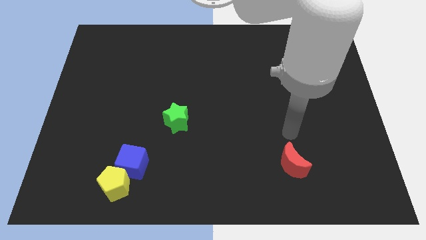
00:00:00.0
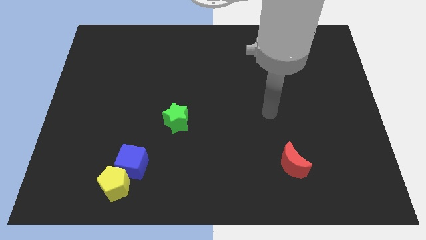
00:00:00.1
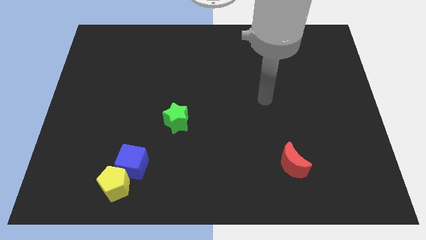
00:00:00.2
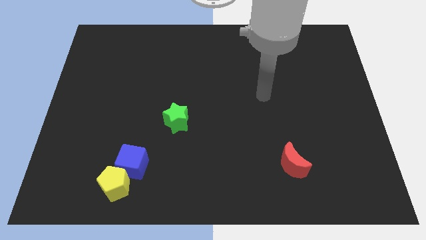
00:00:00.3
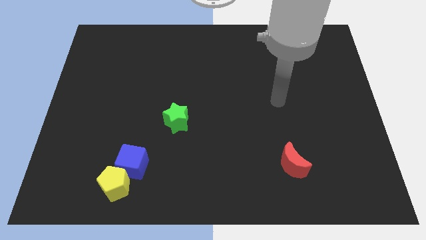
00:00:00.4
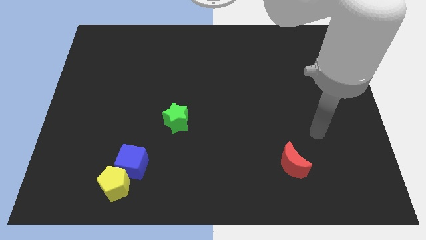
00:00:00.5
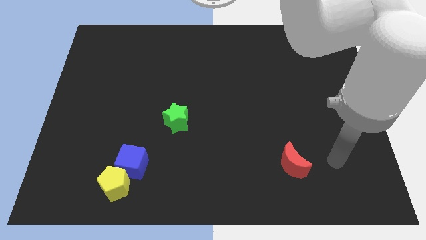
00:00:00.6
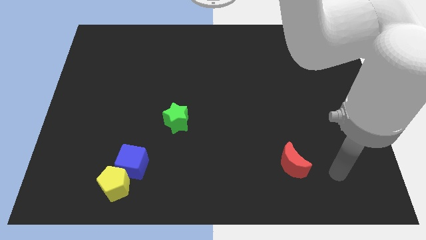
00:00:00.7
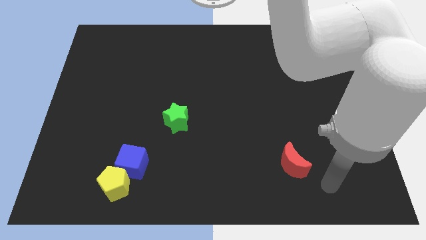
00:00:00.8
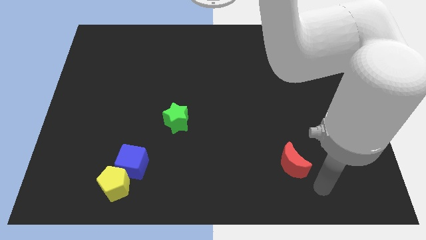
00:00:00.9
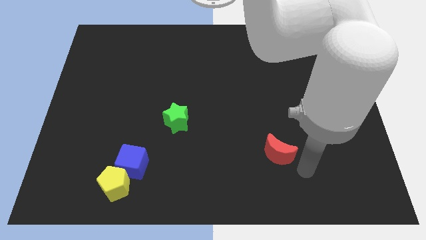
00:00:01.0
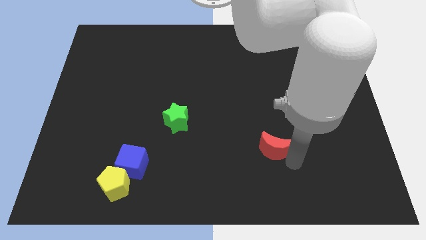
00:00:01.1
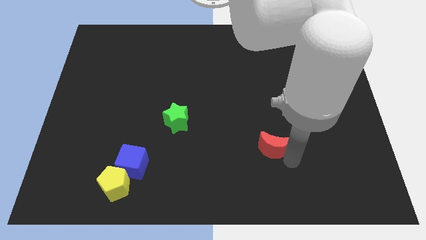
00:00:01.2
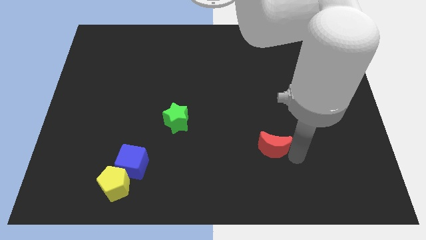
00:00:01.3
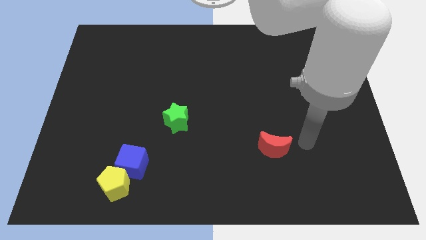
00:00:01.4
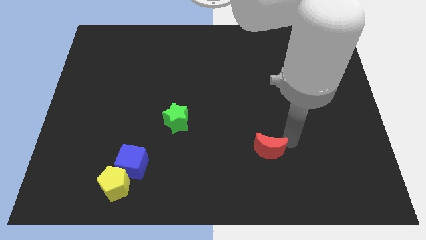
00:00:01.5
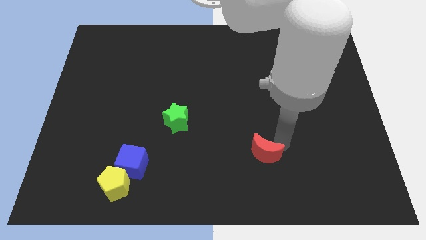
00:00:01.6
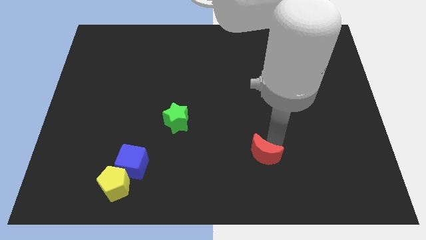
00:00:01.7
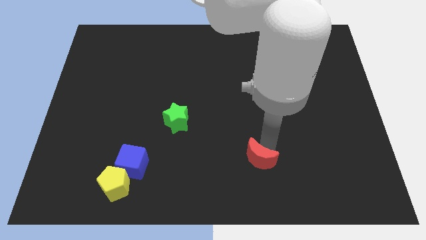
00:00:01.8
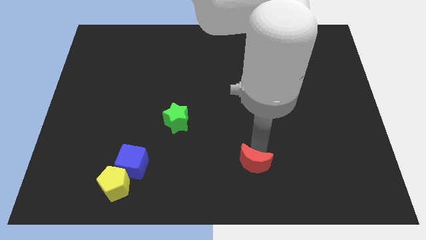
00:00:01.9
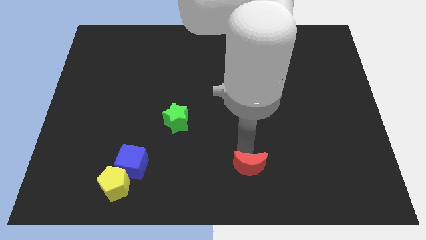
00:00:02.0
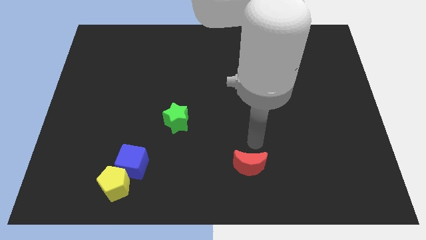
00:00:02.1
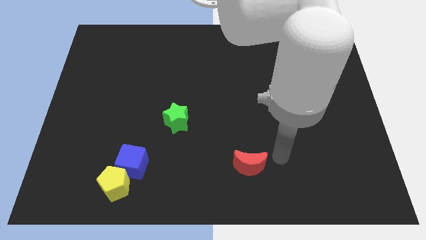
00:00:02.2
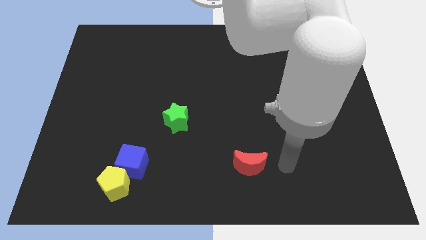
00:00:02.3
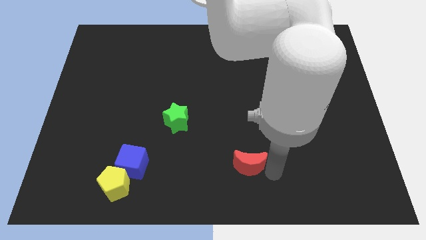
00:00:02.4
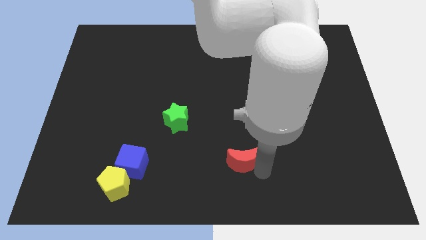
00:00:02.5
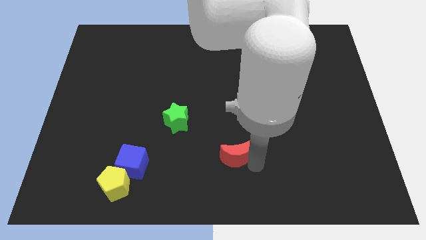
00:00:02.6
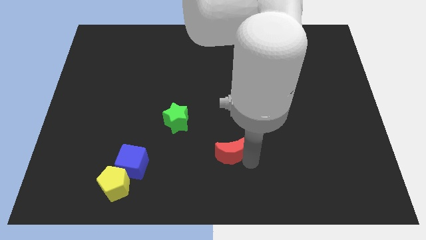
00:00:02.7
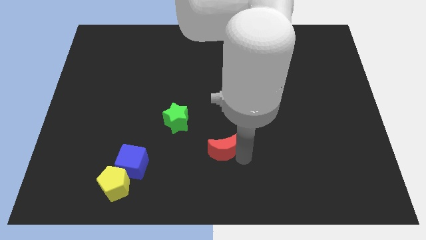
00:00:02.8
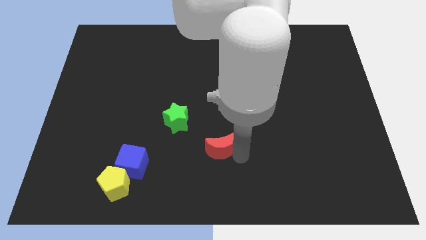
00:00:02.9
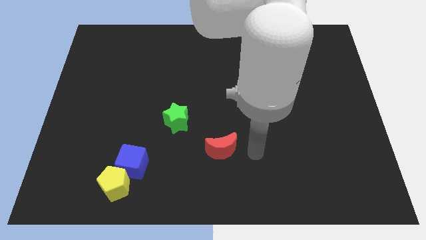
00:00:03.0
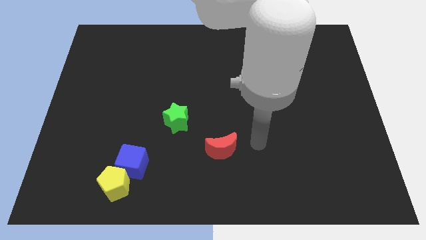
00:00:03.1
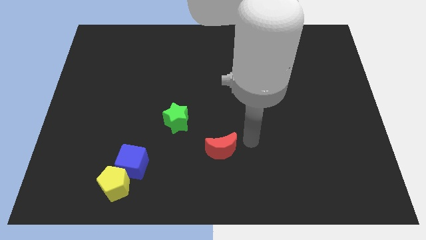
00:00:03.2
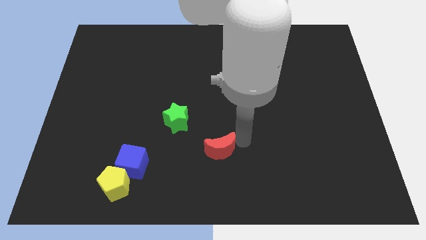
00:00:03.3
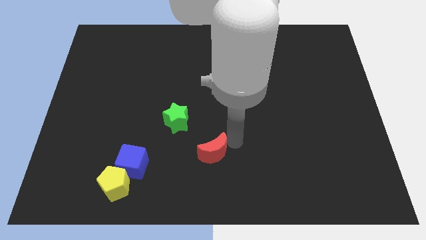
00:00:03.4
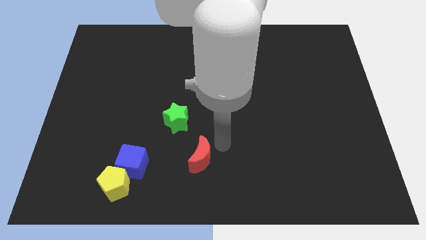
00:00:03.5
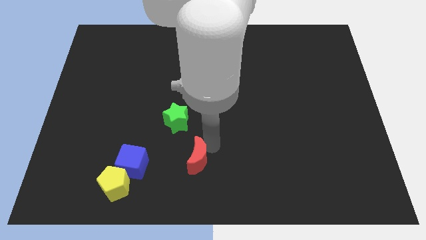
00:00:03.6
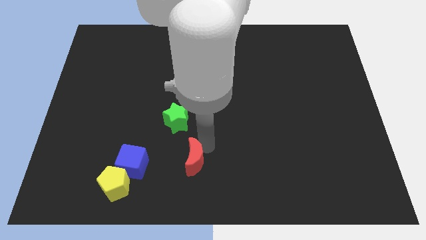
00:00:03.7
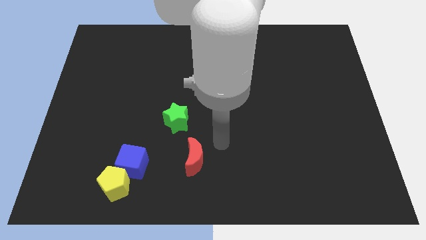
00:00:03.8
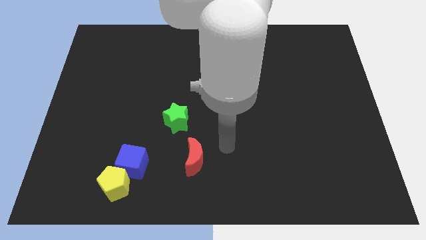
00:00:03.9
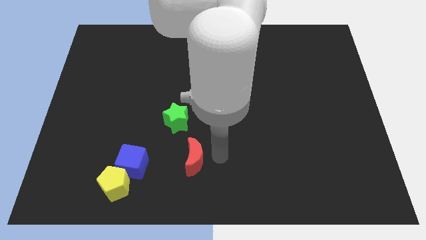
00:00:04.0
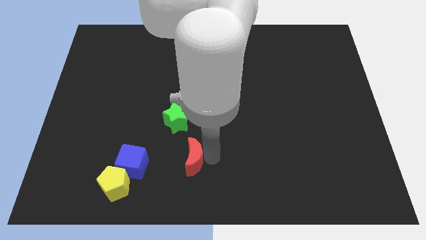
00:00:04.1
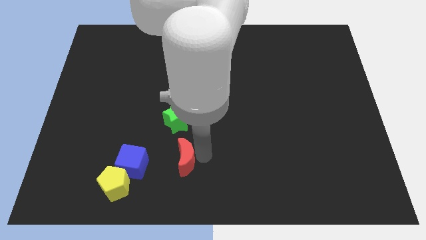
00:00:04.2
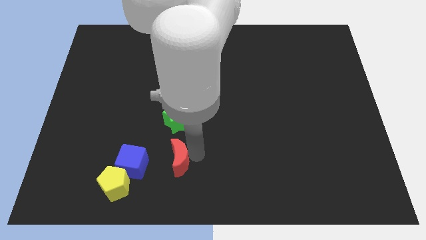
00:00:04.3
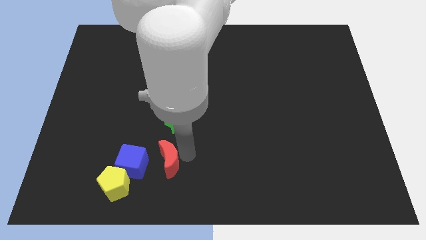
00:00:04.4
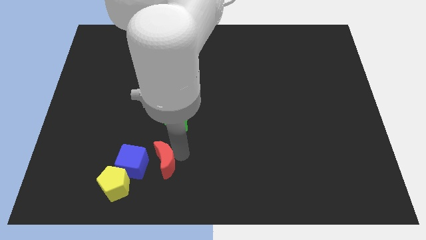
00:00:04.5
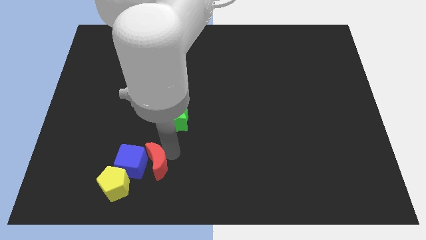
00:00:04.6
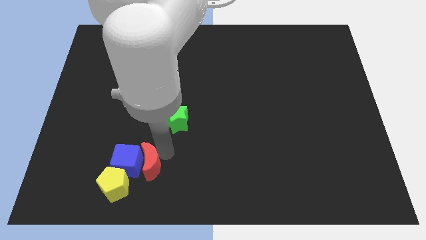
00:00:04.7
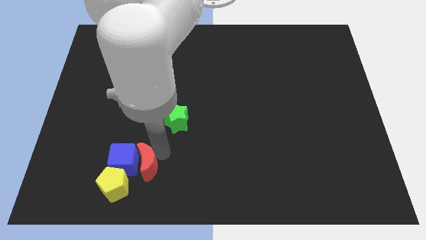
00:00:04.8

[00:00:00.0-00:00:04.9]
slide the red moon close to the cube

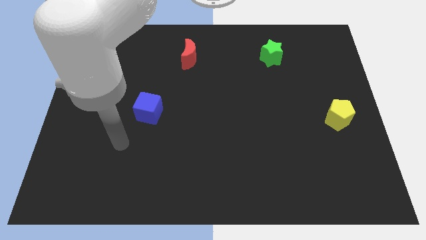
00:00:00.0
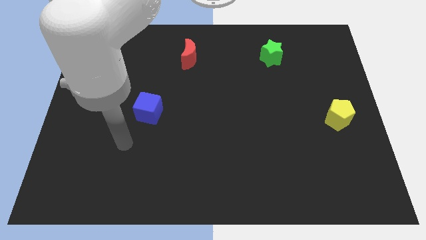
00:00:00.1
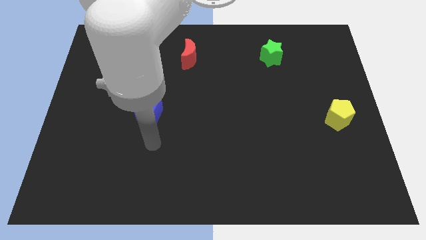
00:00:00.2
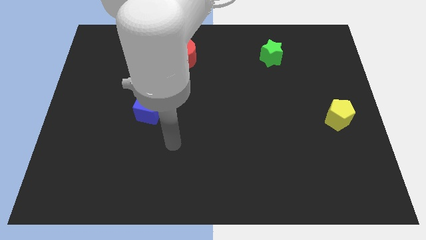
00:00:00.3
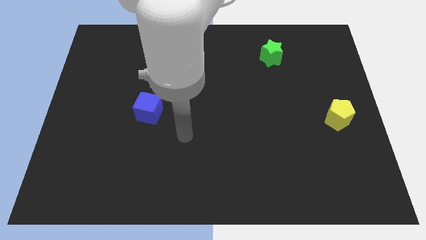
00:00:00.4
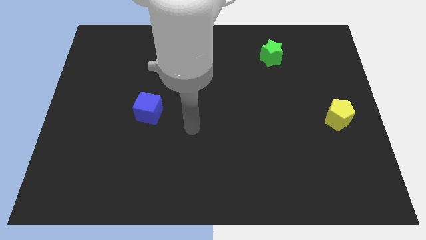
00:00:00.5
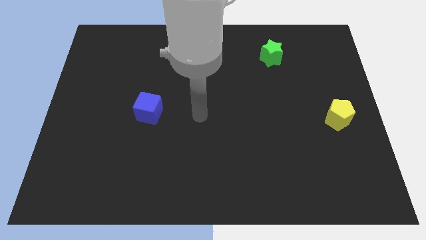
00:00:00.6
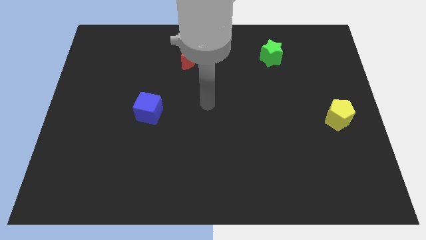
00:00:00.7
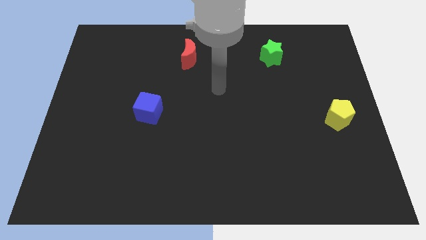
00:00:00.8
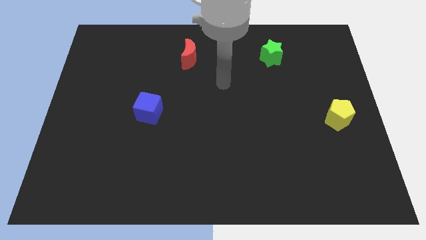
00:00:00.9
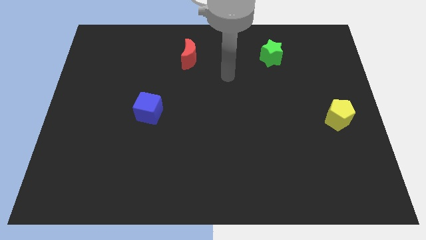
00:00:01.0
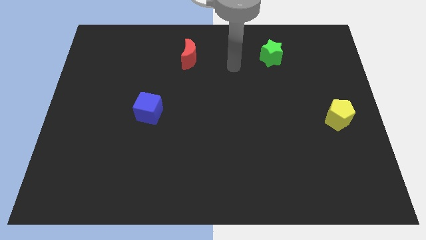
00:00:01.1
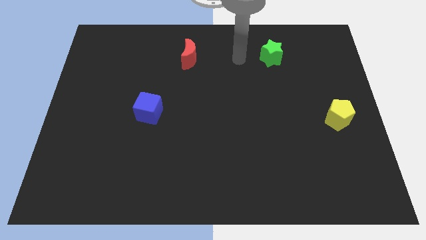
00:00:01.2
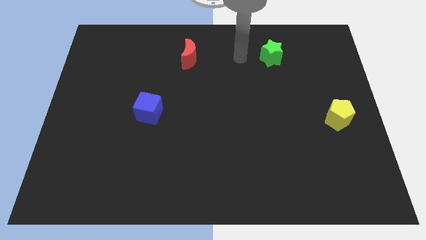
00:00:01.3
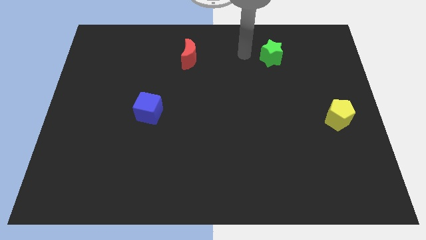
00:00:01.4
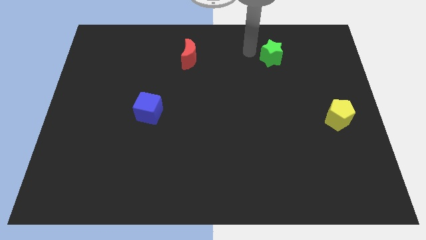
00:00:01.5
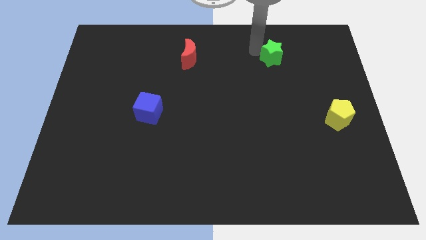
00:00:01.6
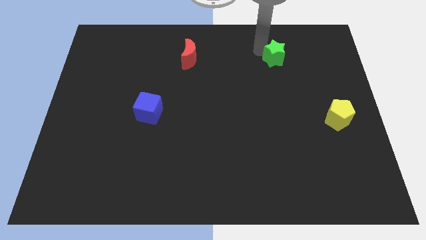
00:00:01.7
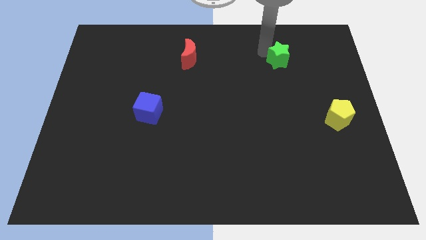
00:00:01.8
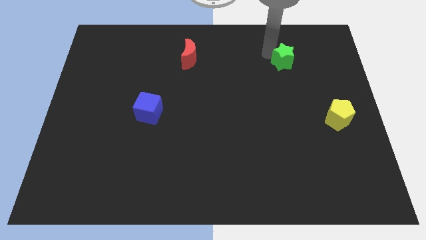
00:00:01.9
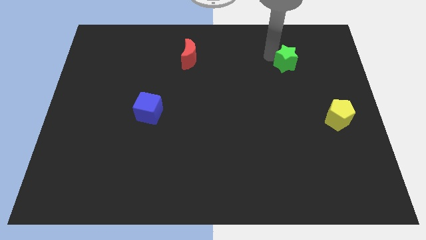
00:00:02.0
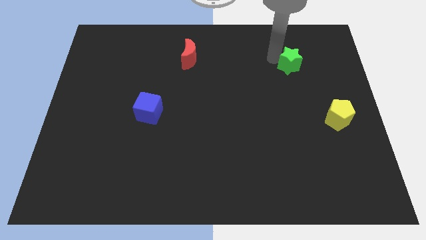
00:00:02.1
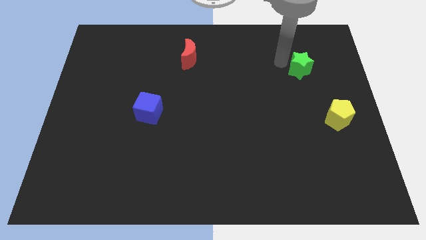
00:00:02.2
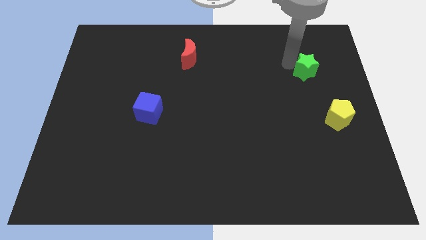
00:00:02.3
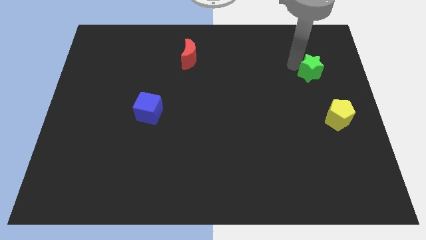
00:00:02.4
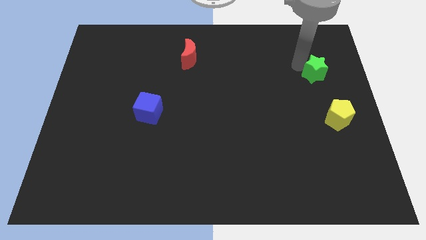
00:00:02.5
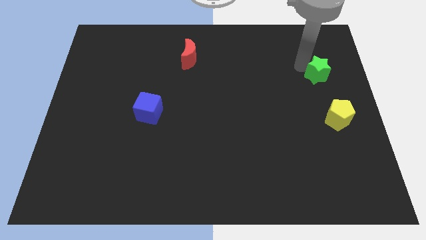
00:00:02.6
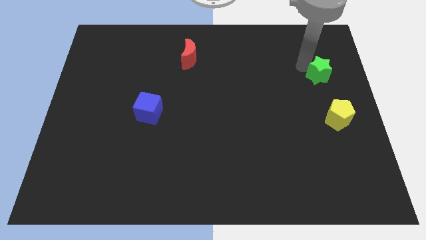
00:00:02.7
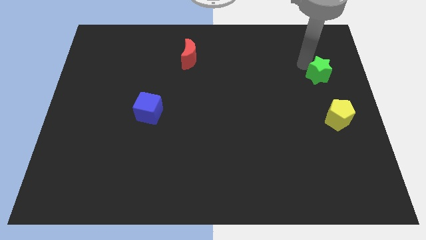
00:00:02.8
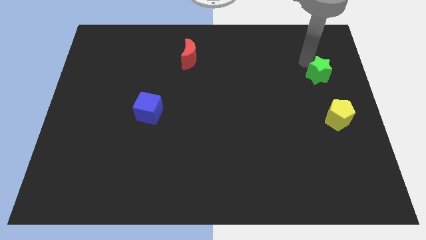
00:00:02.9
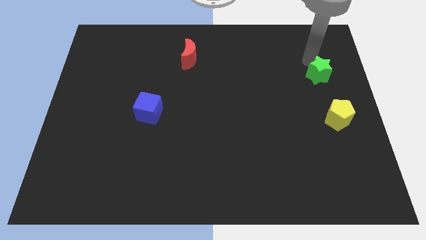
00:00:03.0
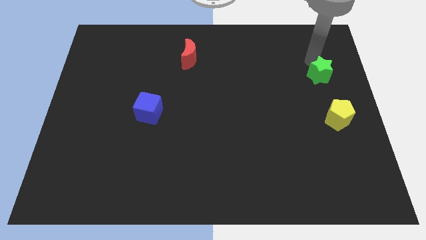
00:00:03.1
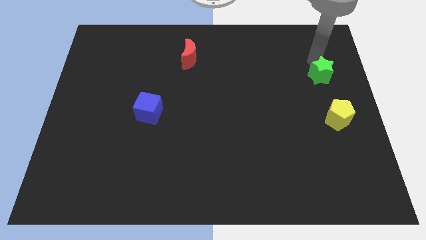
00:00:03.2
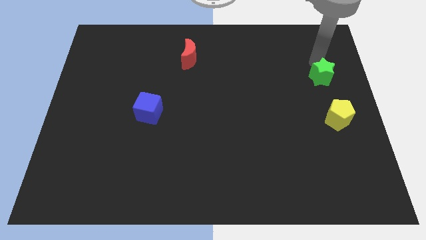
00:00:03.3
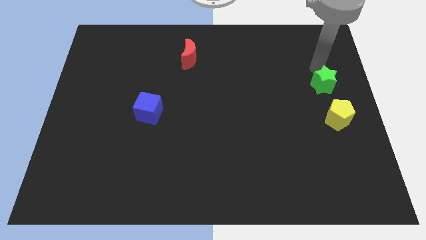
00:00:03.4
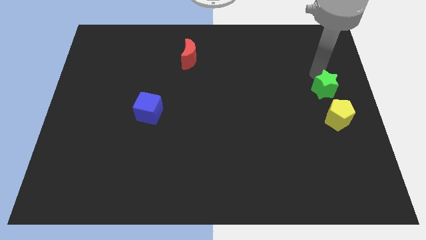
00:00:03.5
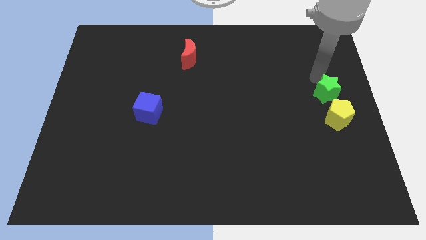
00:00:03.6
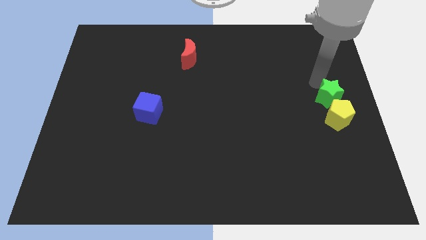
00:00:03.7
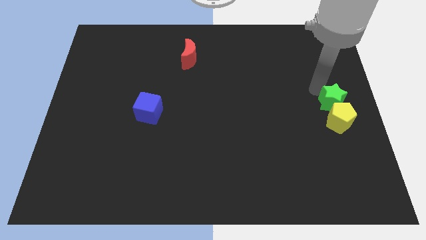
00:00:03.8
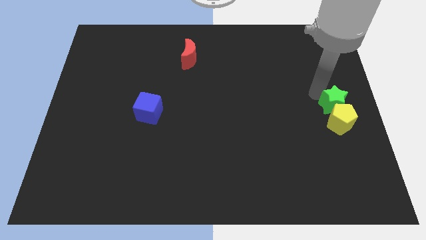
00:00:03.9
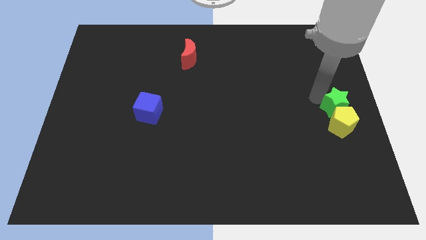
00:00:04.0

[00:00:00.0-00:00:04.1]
move the green star next to the yellow block
